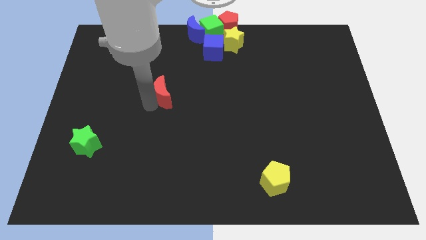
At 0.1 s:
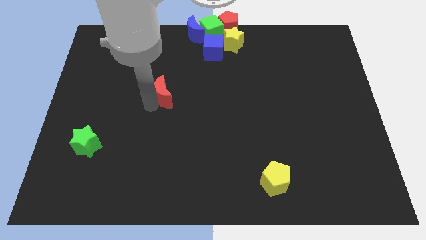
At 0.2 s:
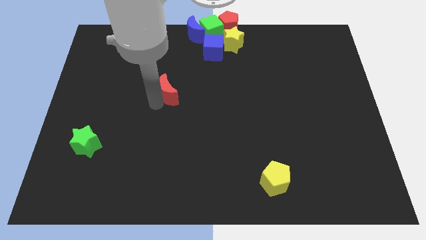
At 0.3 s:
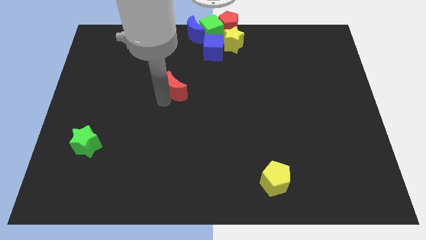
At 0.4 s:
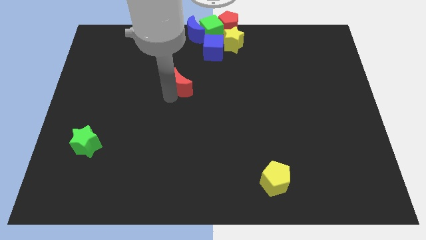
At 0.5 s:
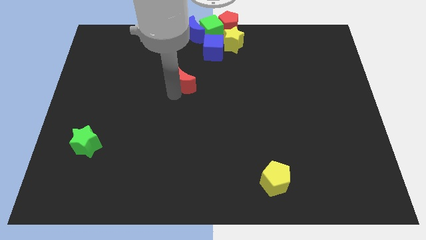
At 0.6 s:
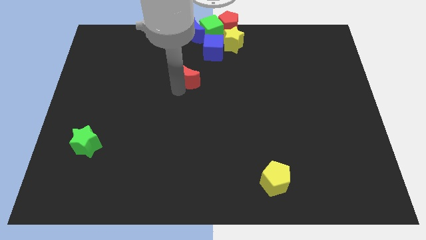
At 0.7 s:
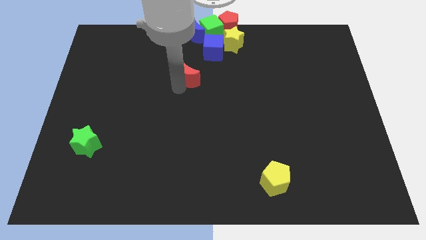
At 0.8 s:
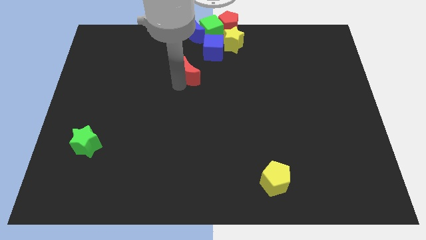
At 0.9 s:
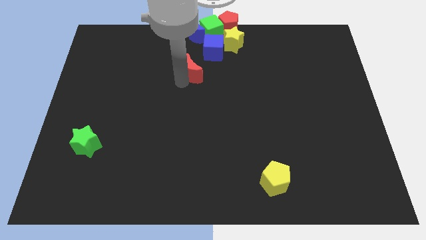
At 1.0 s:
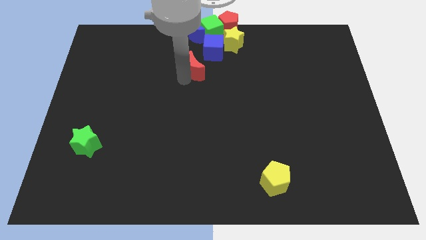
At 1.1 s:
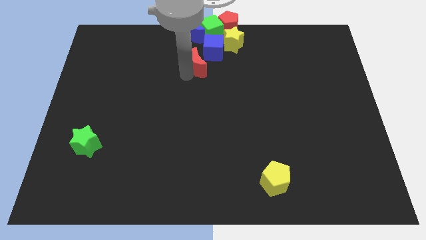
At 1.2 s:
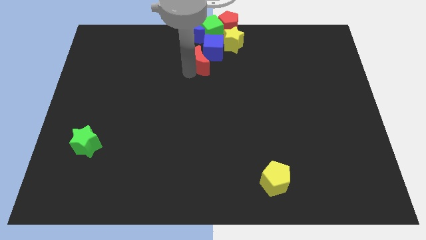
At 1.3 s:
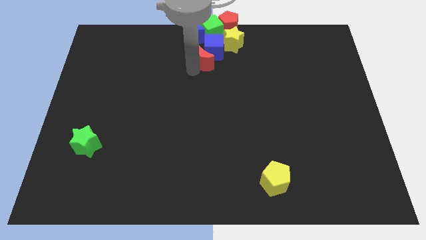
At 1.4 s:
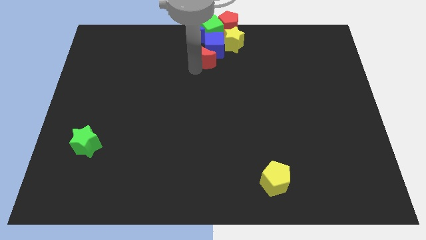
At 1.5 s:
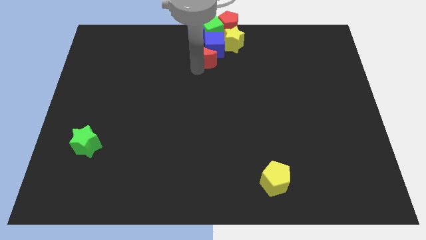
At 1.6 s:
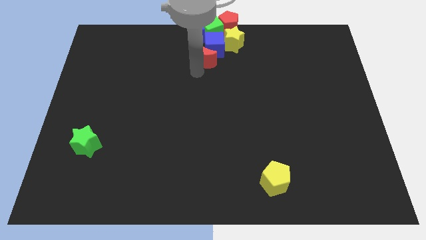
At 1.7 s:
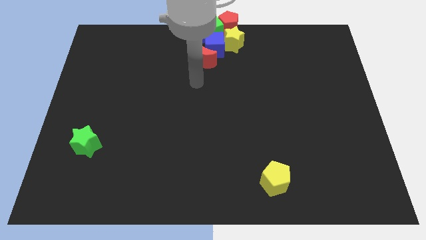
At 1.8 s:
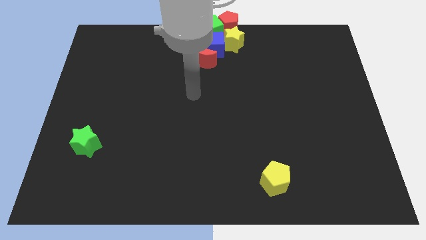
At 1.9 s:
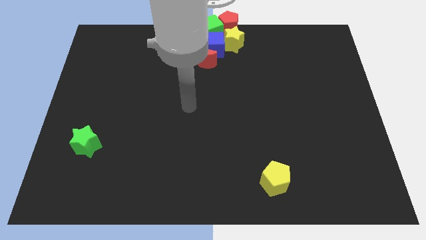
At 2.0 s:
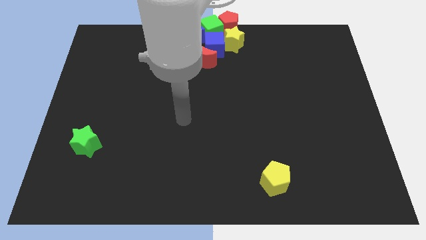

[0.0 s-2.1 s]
push the red moon into the blue cube

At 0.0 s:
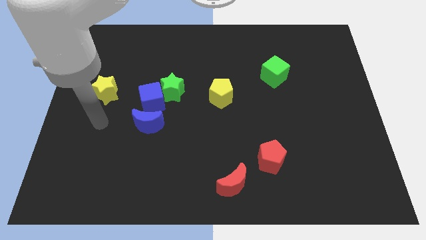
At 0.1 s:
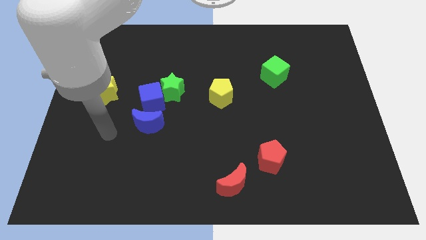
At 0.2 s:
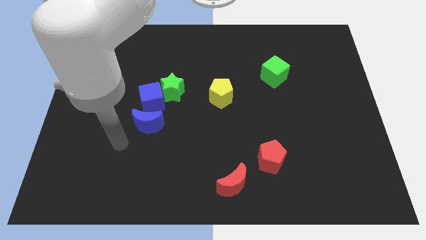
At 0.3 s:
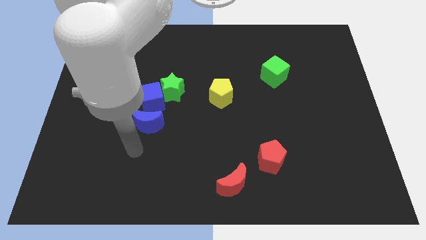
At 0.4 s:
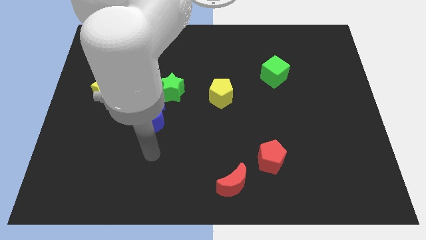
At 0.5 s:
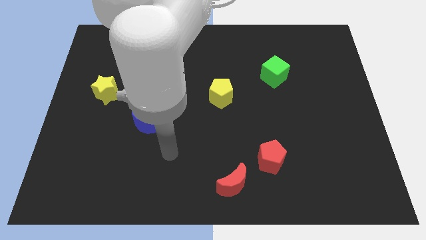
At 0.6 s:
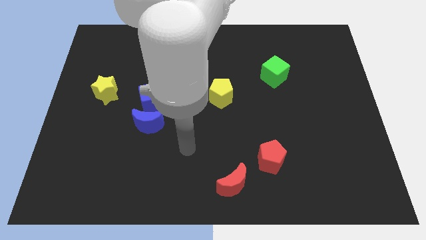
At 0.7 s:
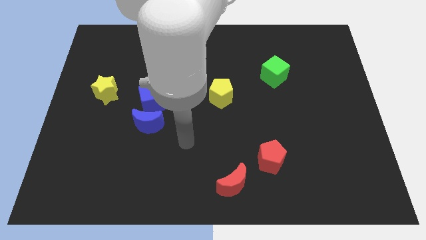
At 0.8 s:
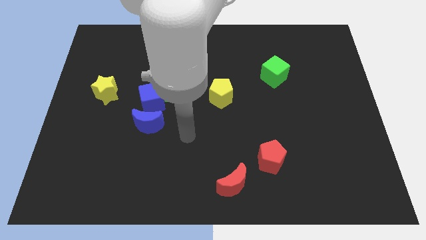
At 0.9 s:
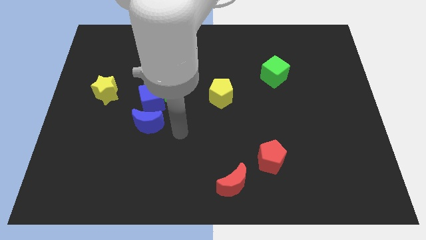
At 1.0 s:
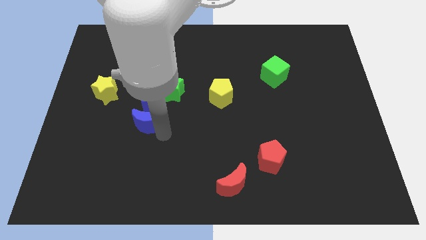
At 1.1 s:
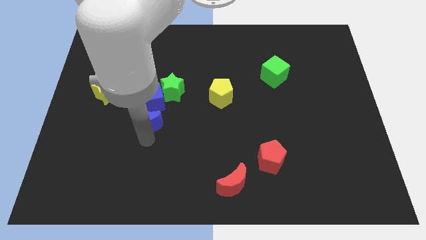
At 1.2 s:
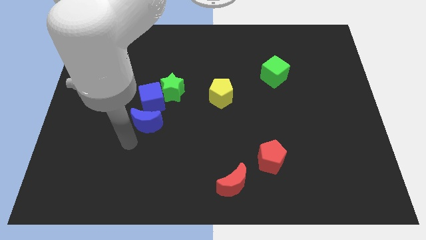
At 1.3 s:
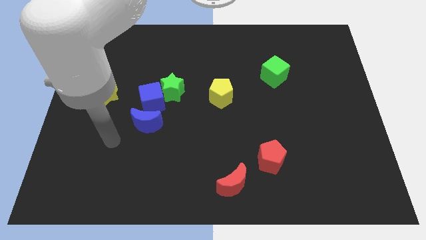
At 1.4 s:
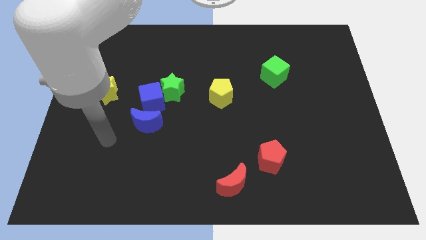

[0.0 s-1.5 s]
move away from the yellow star

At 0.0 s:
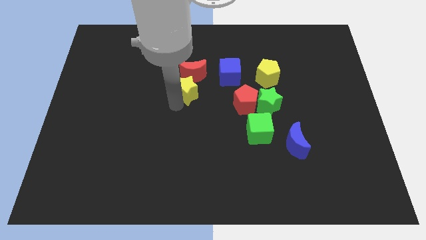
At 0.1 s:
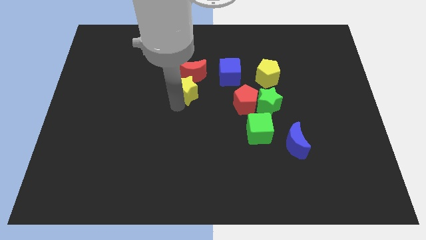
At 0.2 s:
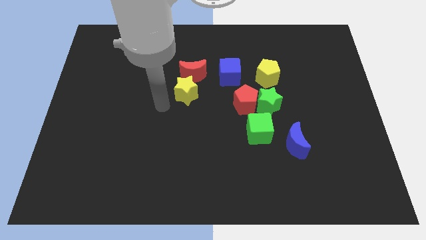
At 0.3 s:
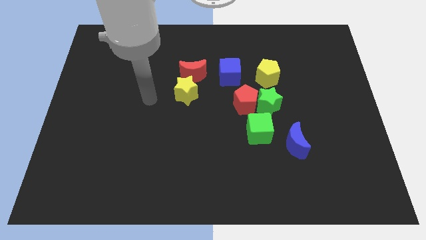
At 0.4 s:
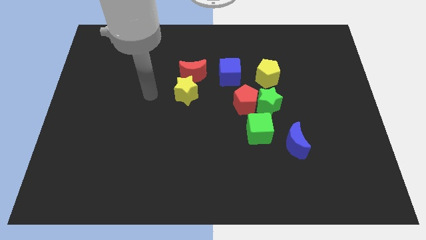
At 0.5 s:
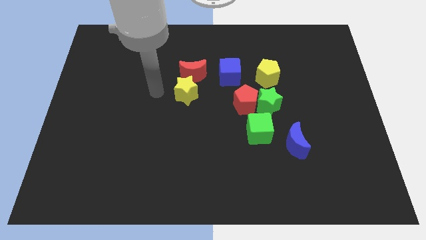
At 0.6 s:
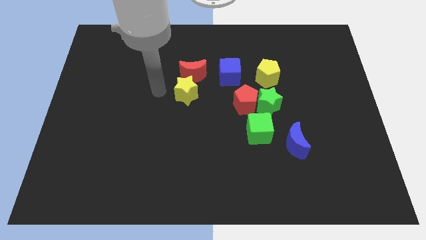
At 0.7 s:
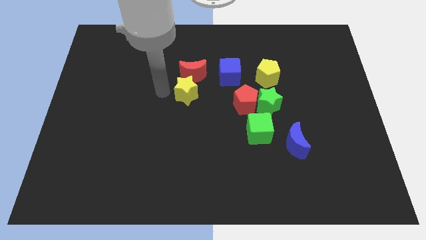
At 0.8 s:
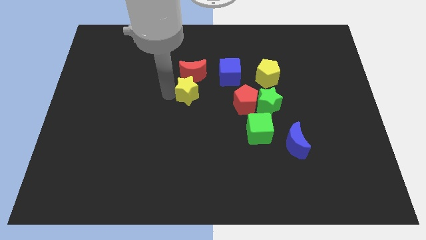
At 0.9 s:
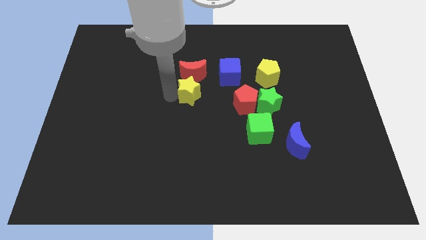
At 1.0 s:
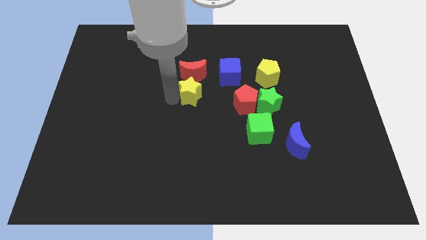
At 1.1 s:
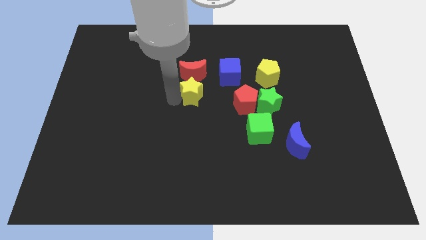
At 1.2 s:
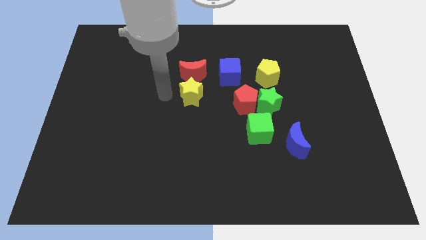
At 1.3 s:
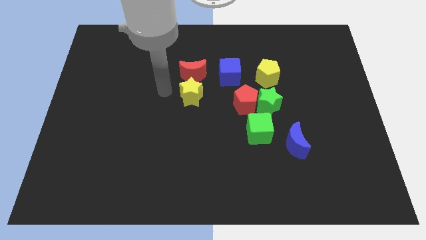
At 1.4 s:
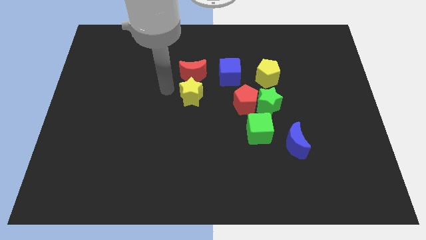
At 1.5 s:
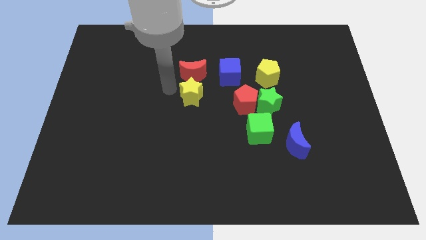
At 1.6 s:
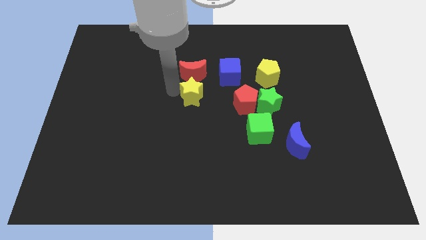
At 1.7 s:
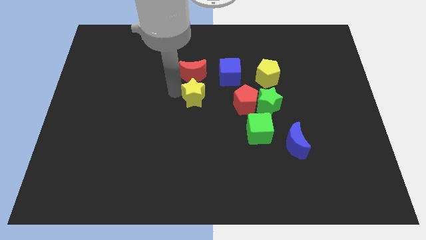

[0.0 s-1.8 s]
drag the yellow star below the red moon

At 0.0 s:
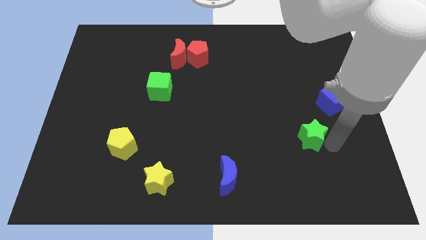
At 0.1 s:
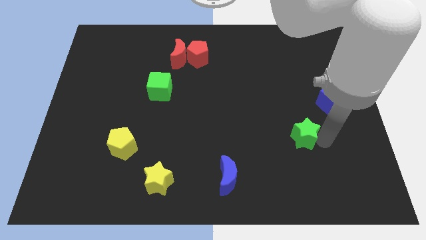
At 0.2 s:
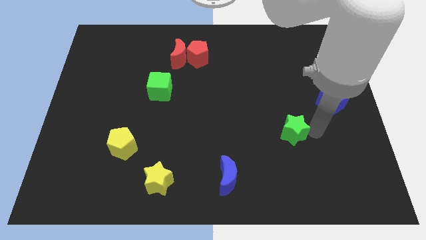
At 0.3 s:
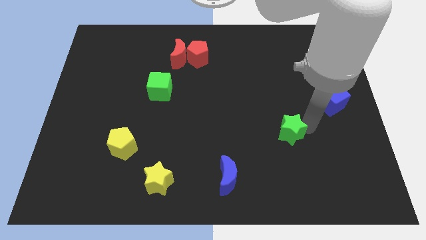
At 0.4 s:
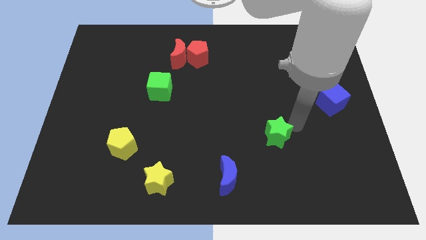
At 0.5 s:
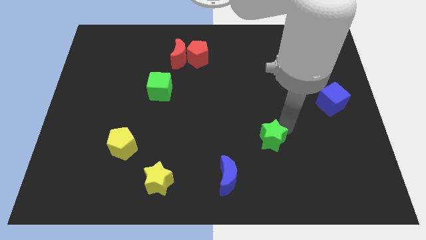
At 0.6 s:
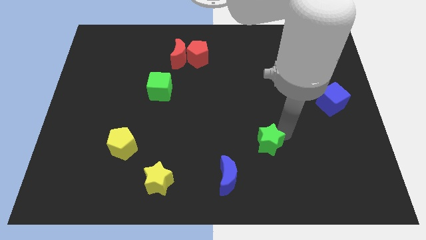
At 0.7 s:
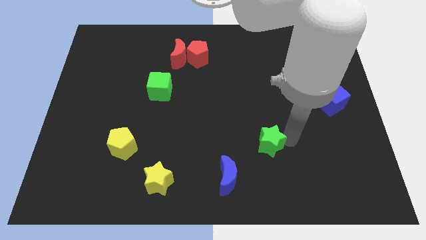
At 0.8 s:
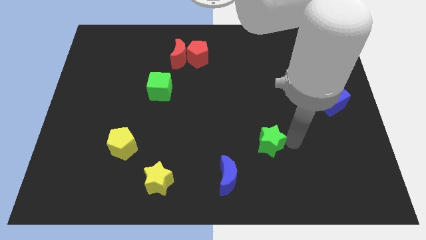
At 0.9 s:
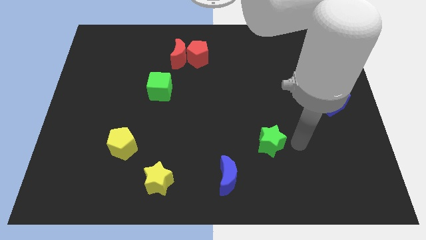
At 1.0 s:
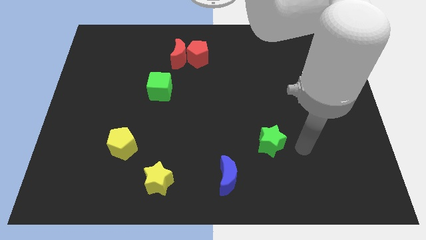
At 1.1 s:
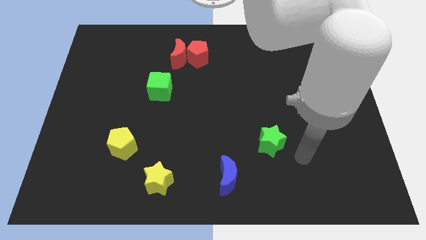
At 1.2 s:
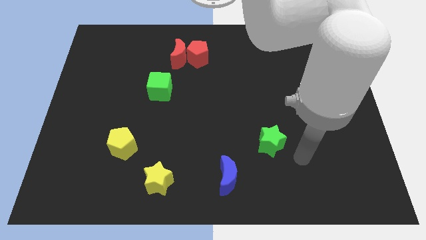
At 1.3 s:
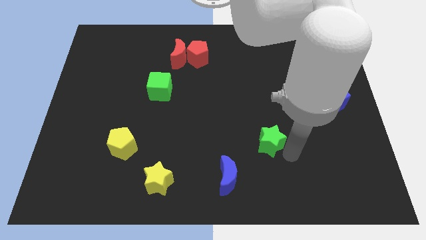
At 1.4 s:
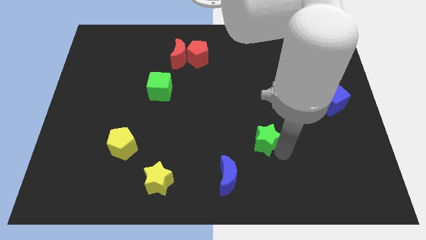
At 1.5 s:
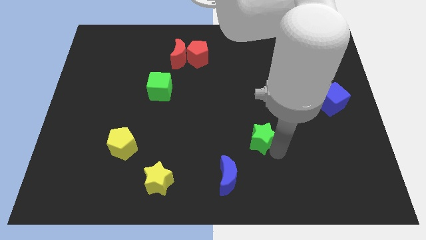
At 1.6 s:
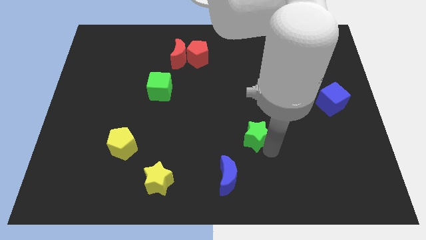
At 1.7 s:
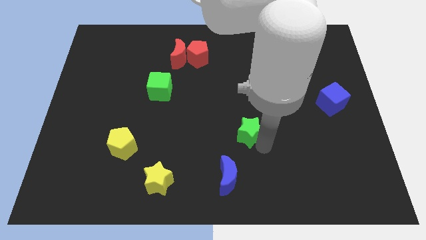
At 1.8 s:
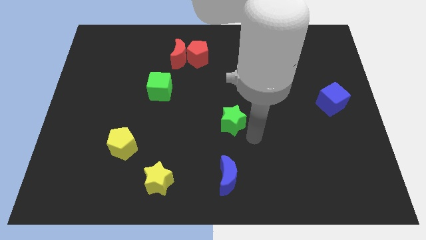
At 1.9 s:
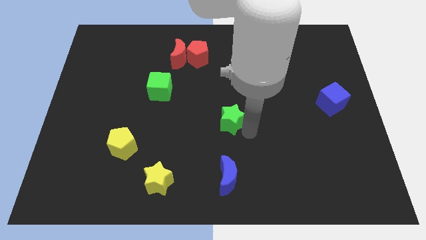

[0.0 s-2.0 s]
place the green star at the center of the board

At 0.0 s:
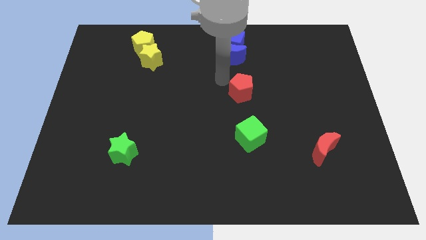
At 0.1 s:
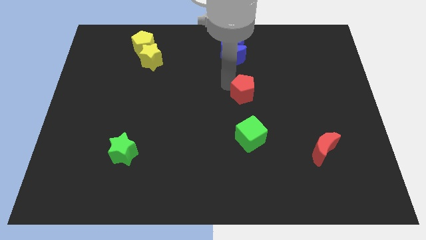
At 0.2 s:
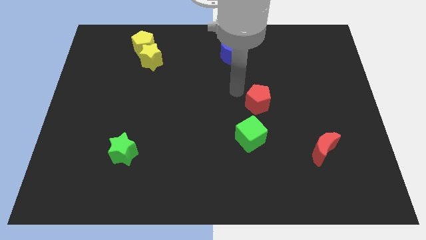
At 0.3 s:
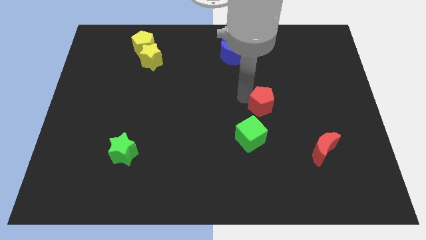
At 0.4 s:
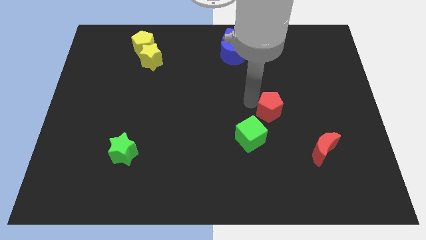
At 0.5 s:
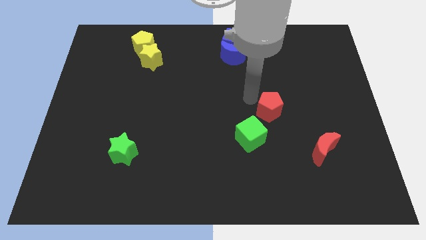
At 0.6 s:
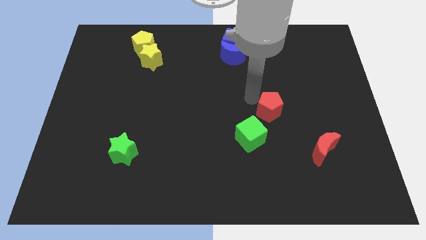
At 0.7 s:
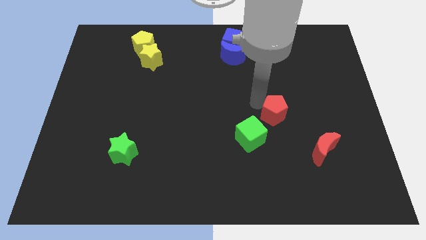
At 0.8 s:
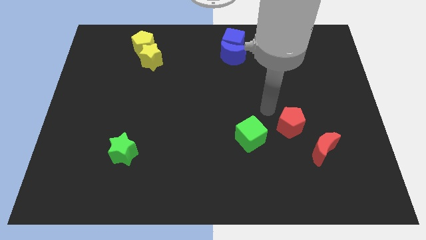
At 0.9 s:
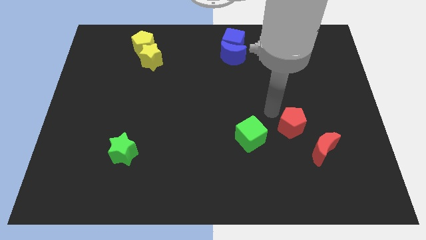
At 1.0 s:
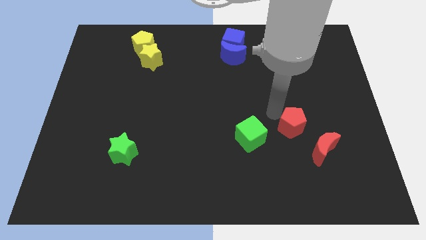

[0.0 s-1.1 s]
move red pentagon close to the red moon

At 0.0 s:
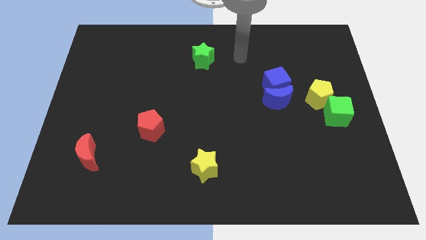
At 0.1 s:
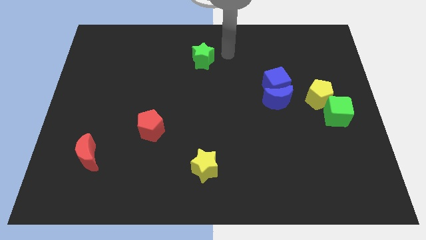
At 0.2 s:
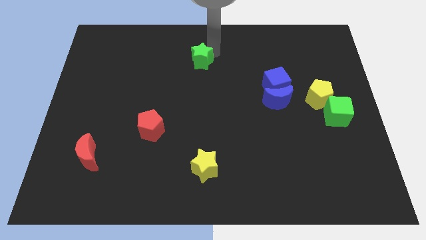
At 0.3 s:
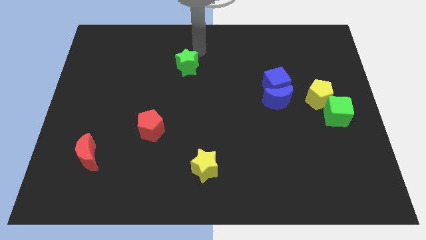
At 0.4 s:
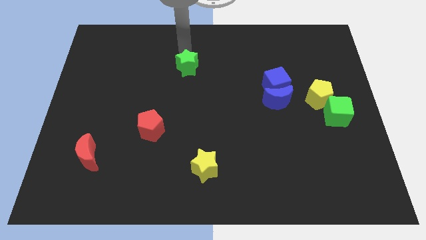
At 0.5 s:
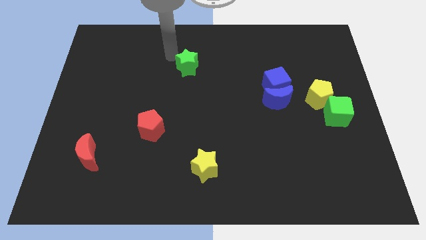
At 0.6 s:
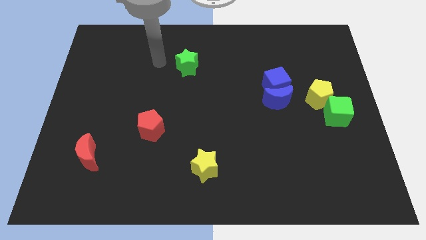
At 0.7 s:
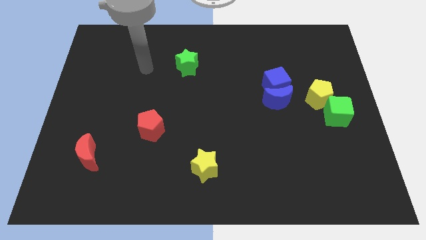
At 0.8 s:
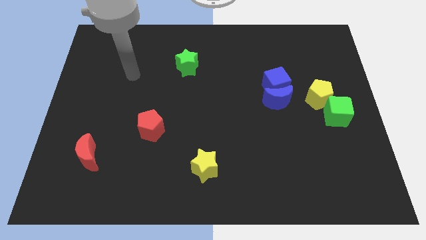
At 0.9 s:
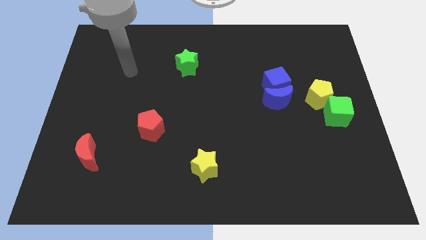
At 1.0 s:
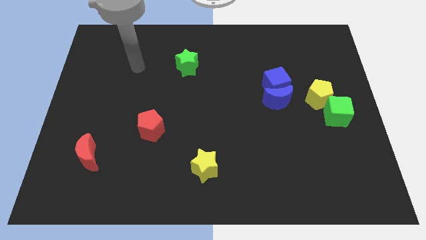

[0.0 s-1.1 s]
go and tap the green star
